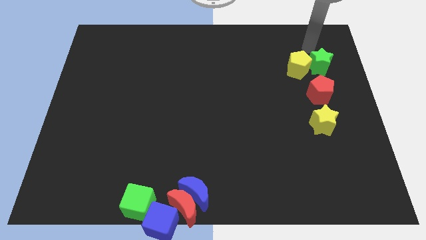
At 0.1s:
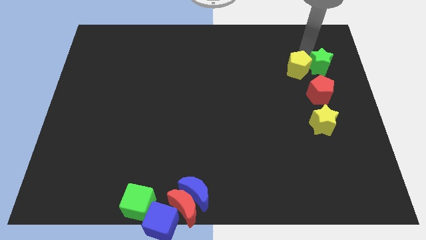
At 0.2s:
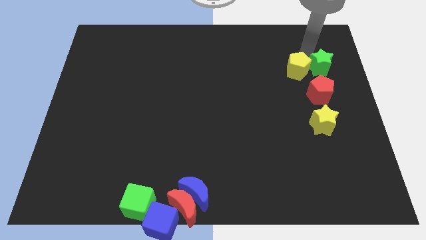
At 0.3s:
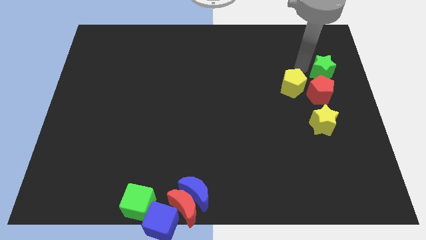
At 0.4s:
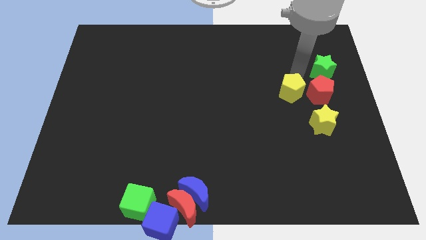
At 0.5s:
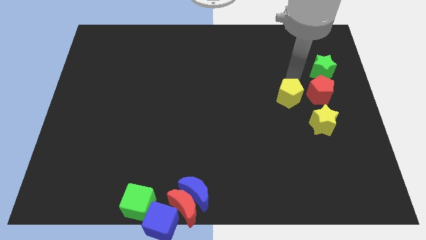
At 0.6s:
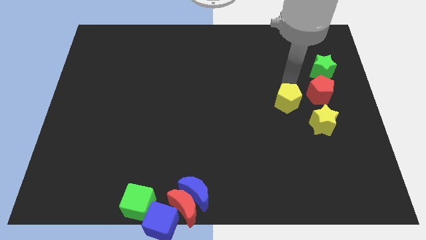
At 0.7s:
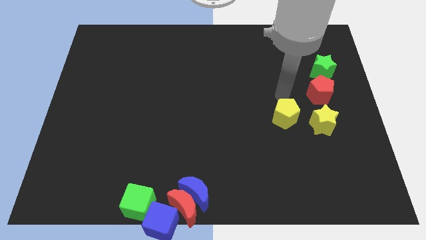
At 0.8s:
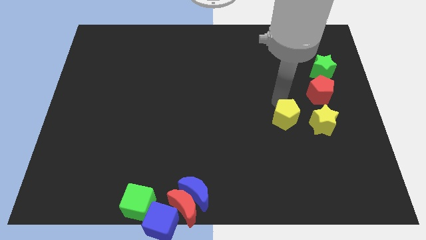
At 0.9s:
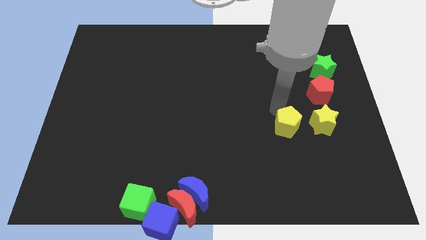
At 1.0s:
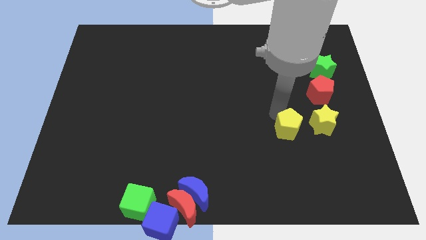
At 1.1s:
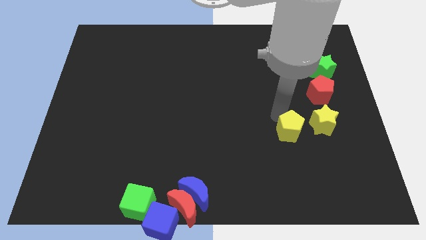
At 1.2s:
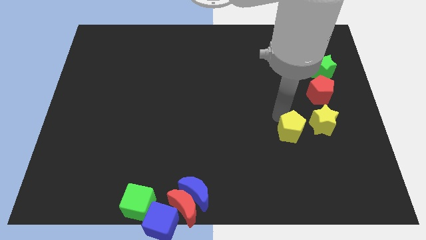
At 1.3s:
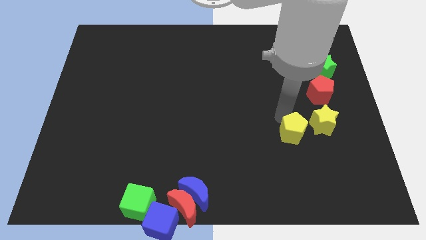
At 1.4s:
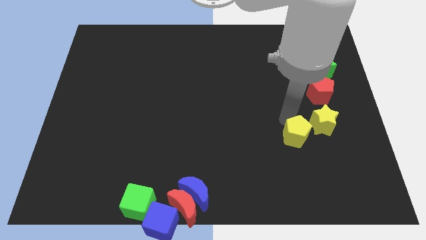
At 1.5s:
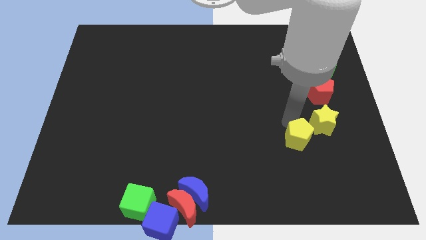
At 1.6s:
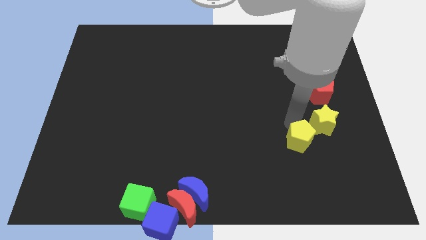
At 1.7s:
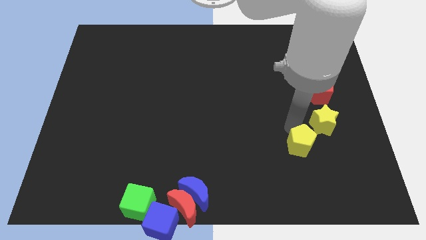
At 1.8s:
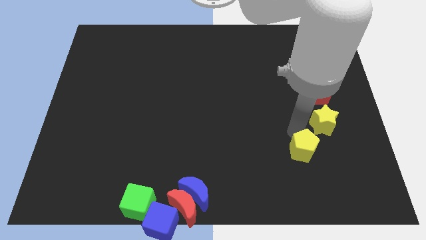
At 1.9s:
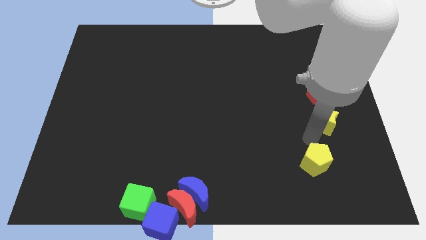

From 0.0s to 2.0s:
move the yellow pentagon away from the green star

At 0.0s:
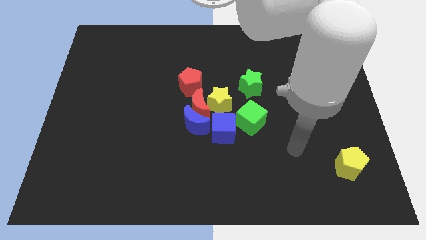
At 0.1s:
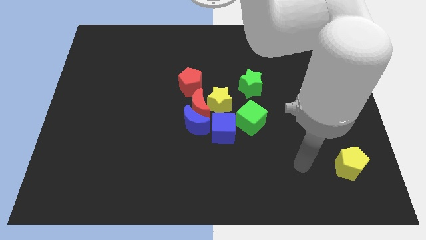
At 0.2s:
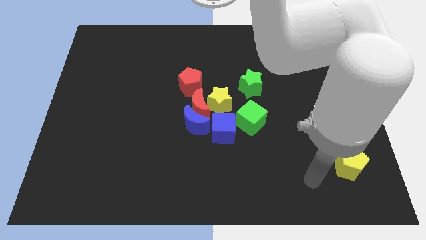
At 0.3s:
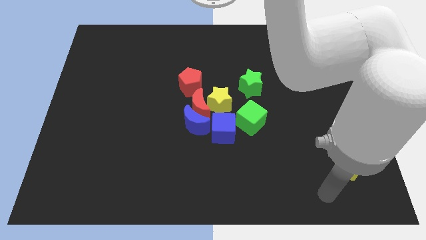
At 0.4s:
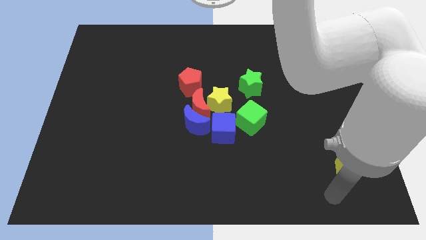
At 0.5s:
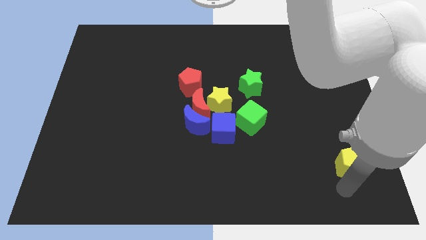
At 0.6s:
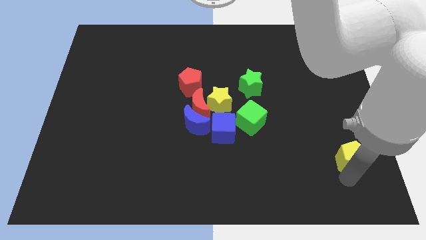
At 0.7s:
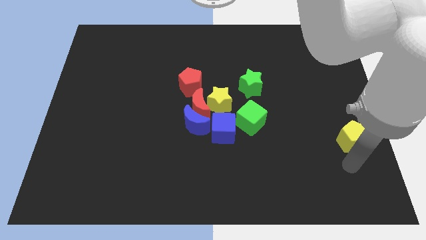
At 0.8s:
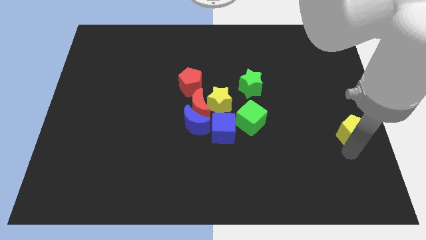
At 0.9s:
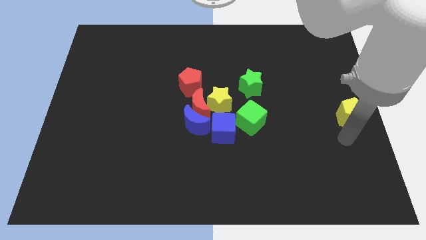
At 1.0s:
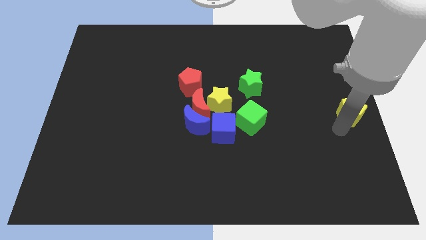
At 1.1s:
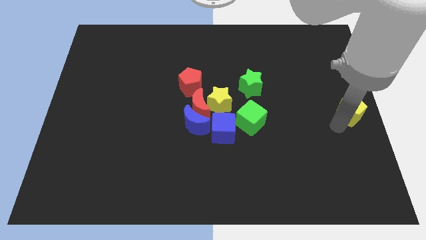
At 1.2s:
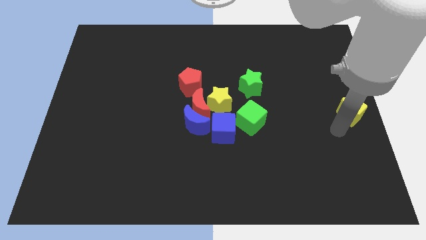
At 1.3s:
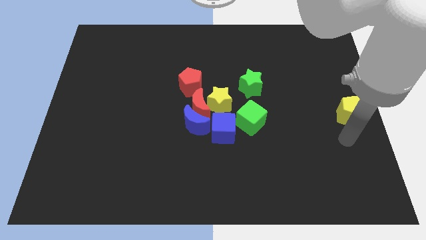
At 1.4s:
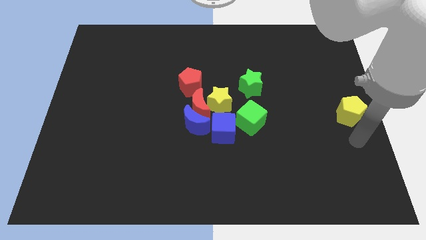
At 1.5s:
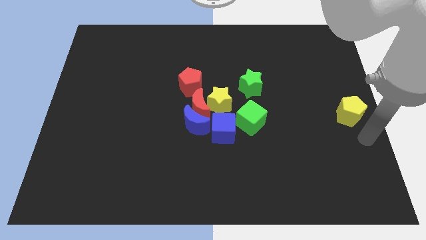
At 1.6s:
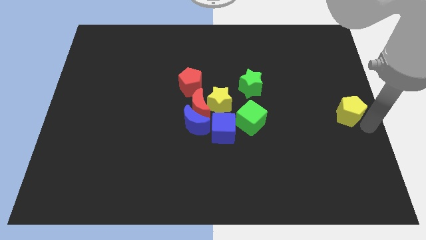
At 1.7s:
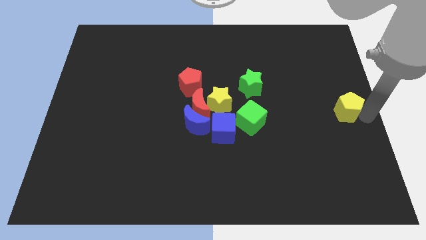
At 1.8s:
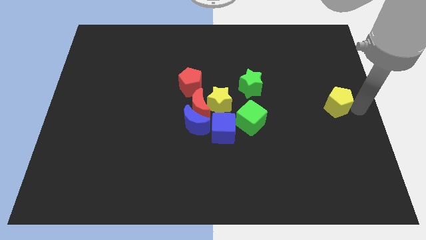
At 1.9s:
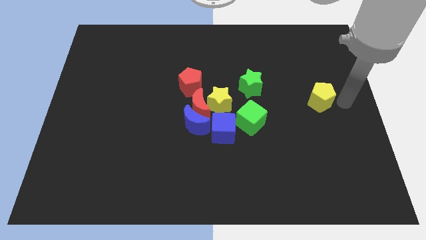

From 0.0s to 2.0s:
move yellow pentagon slightly to the top side of the board

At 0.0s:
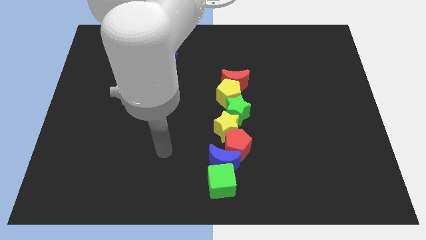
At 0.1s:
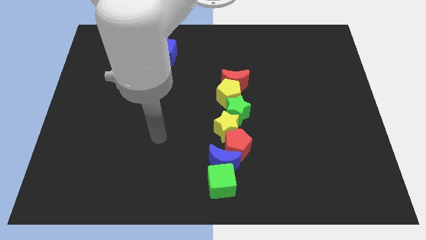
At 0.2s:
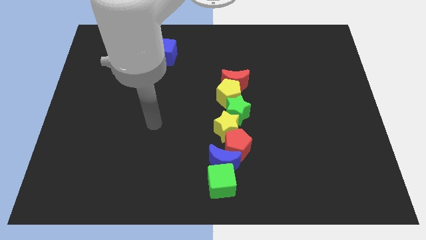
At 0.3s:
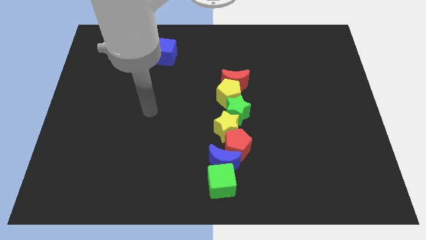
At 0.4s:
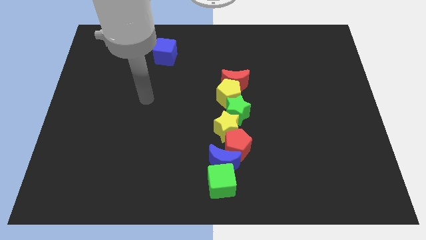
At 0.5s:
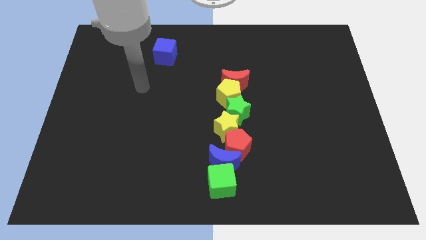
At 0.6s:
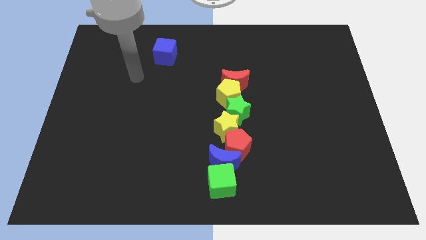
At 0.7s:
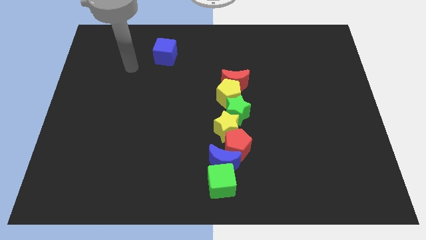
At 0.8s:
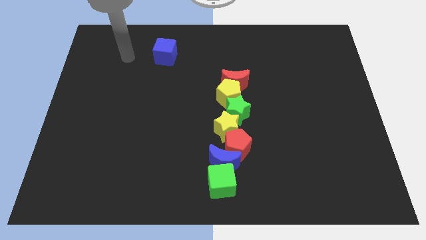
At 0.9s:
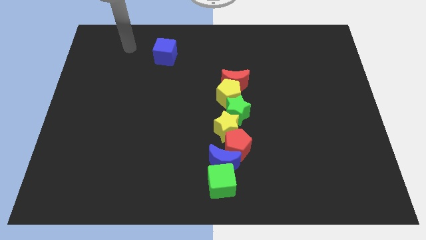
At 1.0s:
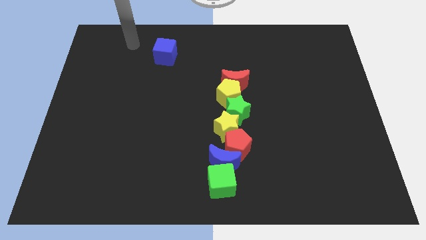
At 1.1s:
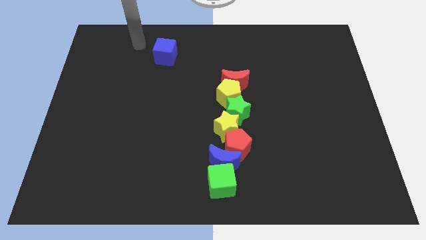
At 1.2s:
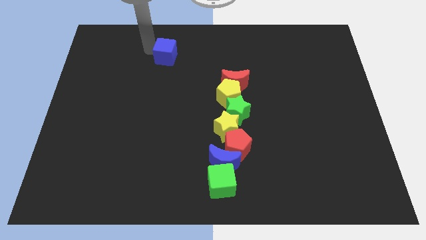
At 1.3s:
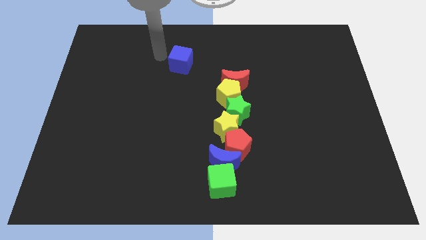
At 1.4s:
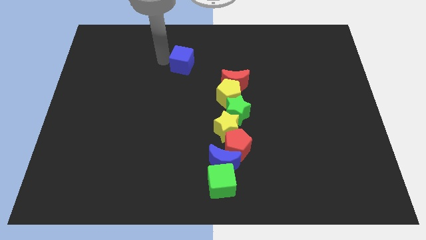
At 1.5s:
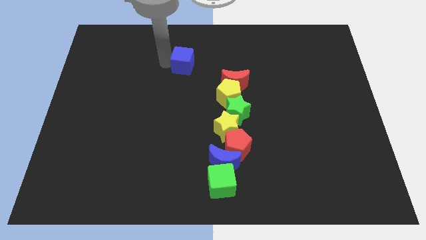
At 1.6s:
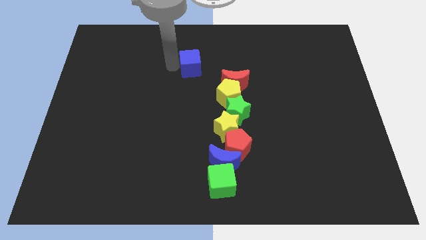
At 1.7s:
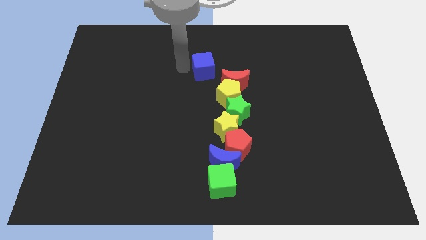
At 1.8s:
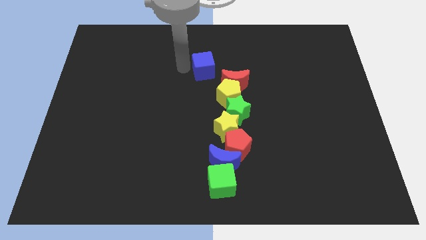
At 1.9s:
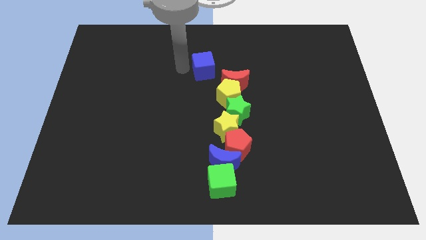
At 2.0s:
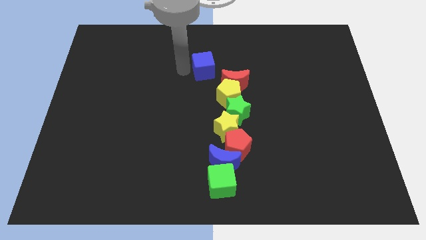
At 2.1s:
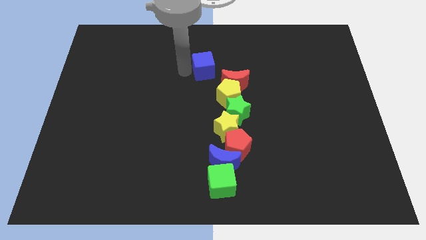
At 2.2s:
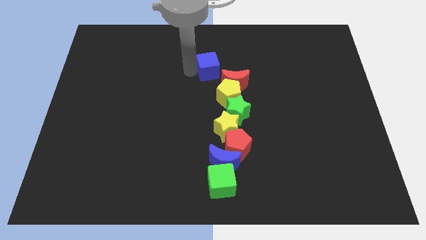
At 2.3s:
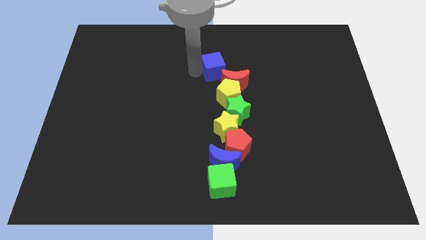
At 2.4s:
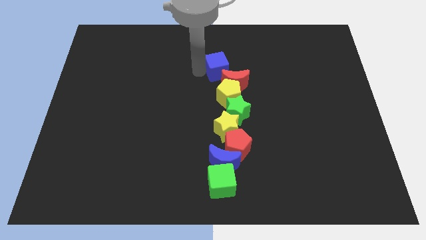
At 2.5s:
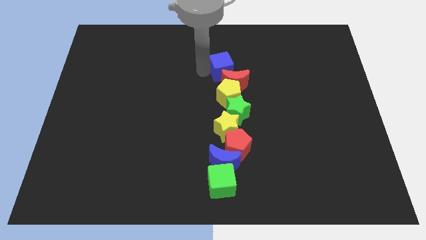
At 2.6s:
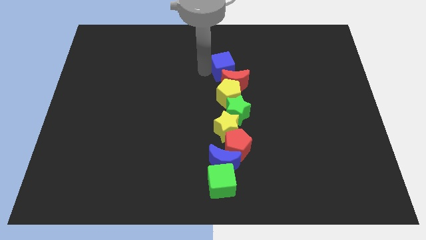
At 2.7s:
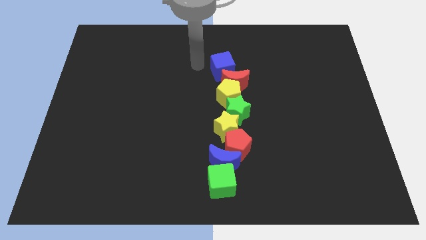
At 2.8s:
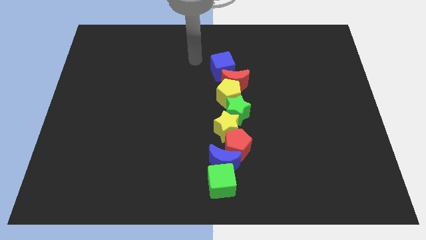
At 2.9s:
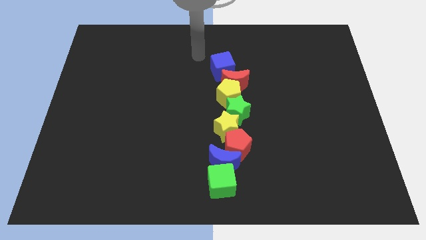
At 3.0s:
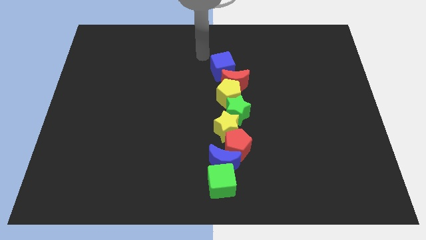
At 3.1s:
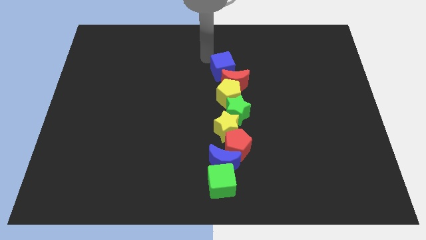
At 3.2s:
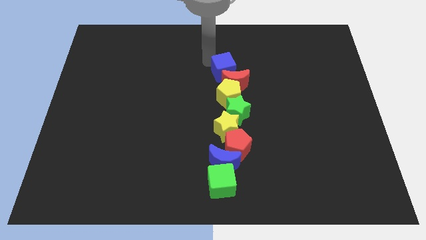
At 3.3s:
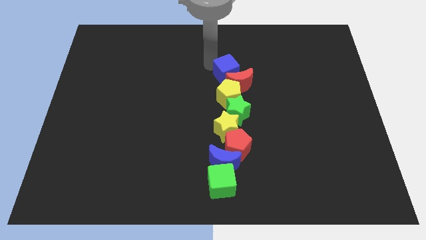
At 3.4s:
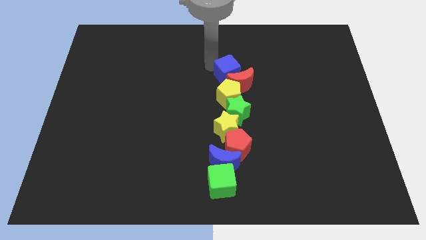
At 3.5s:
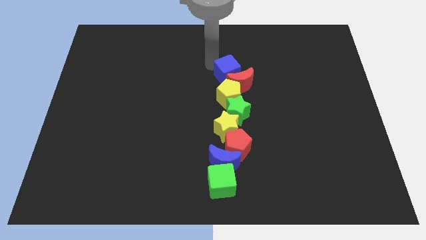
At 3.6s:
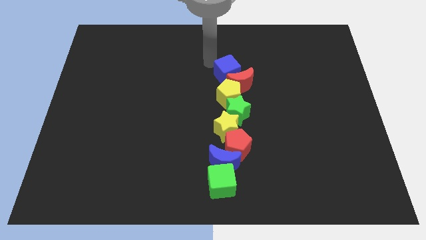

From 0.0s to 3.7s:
drag the blue cube into the red crescent

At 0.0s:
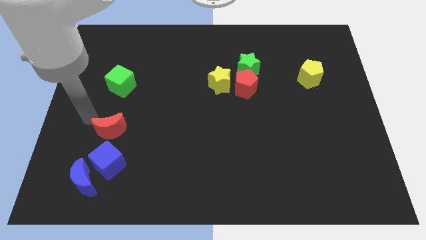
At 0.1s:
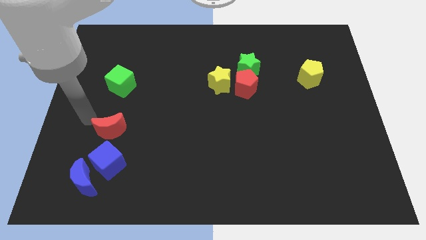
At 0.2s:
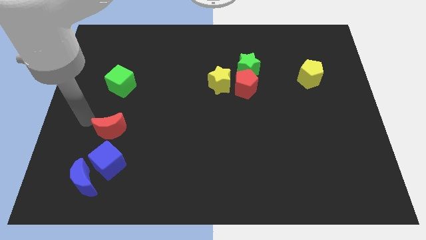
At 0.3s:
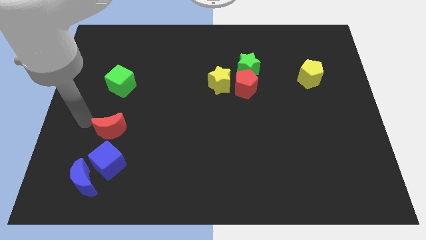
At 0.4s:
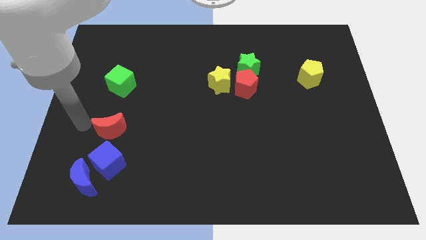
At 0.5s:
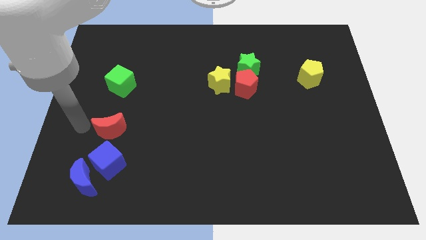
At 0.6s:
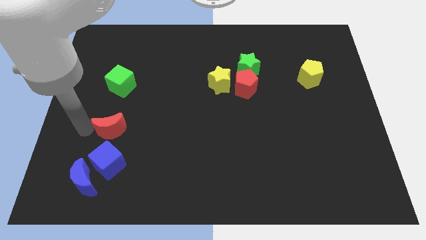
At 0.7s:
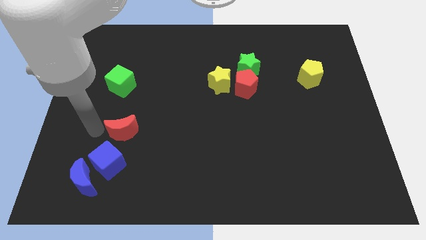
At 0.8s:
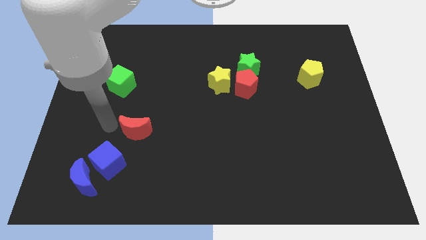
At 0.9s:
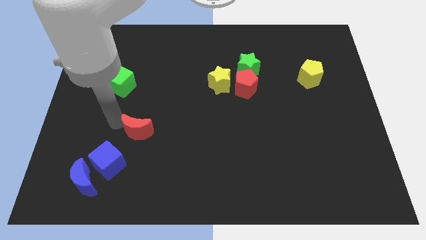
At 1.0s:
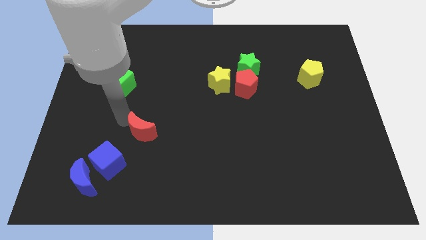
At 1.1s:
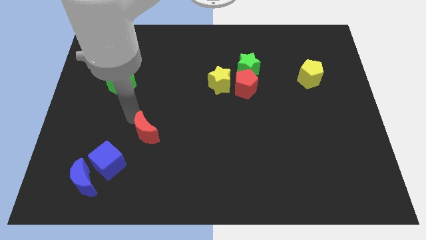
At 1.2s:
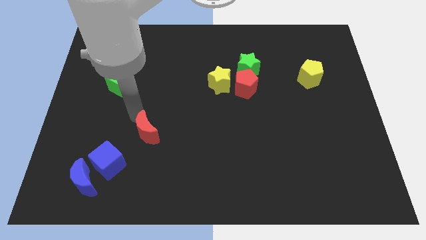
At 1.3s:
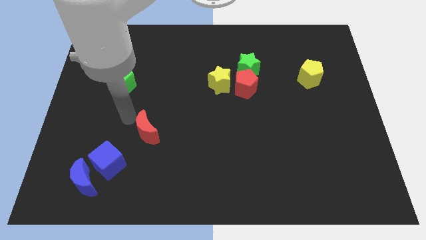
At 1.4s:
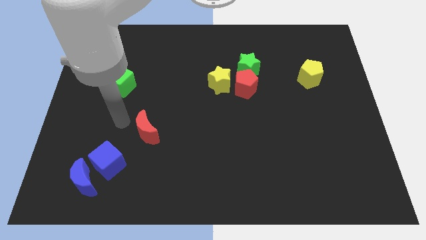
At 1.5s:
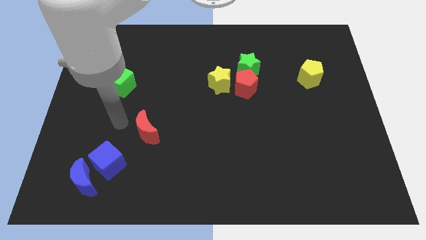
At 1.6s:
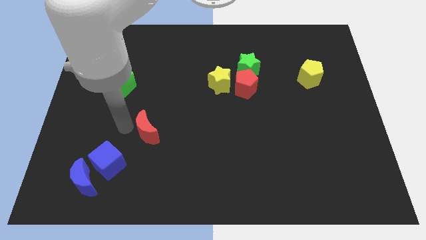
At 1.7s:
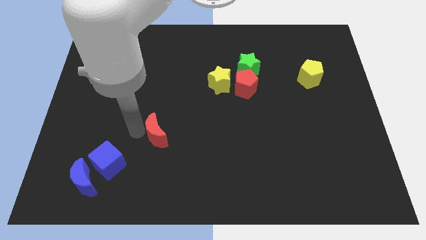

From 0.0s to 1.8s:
place the red crescent at the top right of the blue cube
